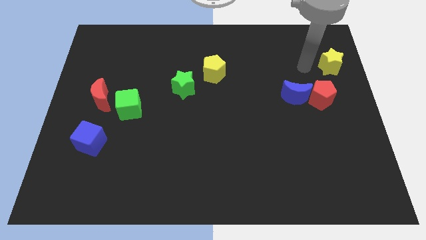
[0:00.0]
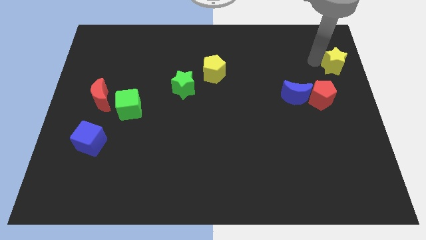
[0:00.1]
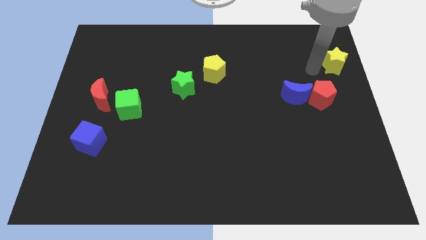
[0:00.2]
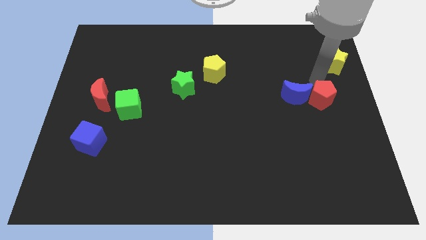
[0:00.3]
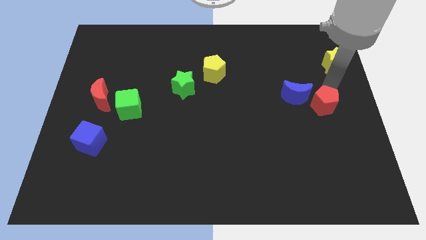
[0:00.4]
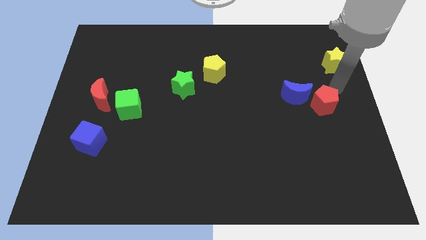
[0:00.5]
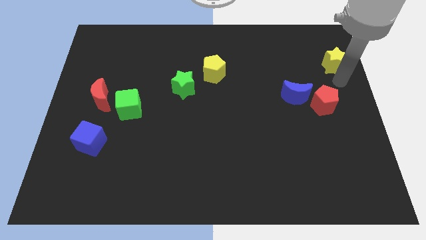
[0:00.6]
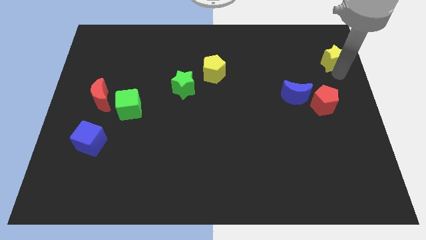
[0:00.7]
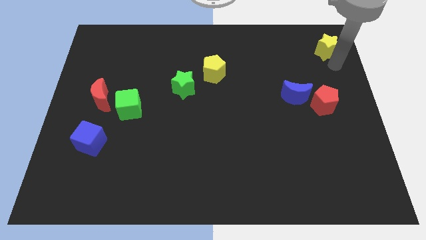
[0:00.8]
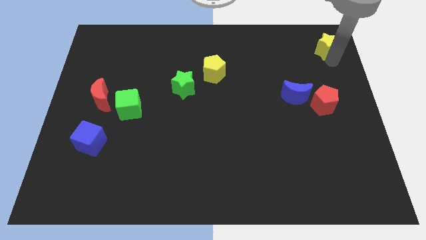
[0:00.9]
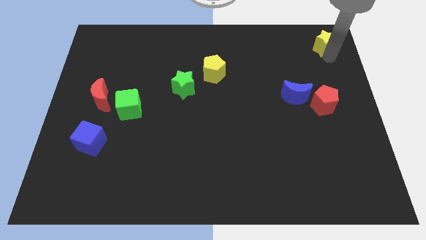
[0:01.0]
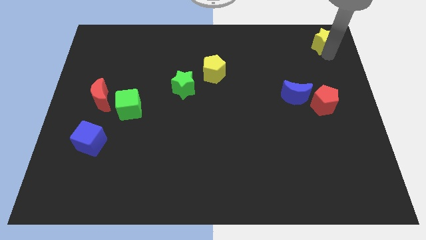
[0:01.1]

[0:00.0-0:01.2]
move the yellow star top right

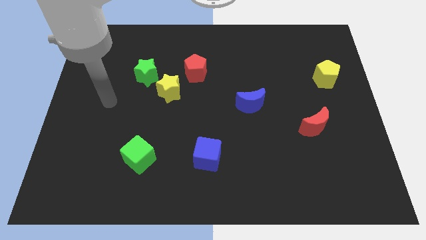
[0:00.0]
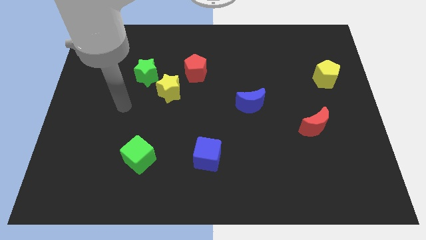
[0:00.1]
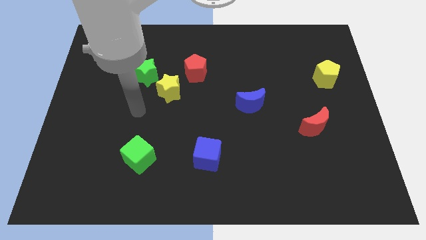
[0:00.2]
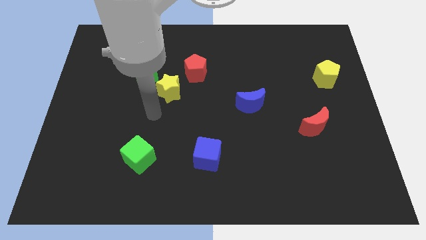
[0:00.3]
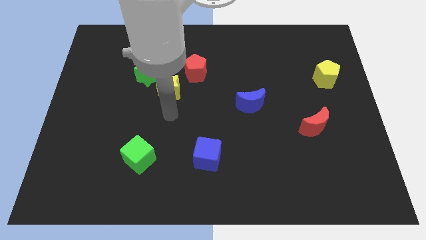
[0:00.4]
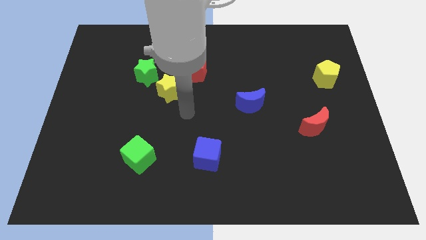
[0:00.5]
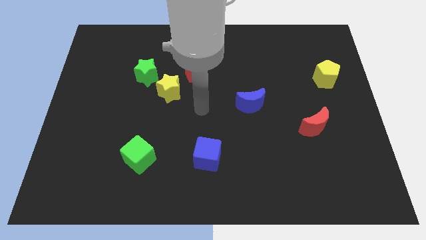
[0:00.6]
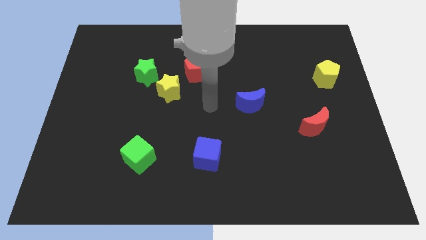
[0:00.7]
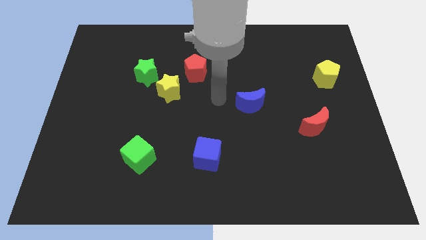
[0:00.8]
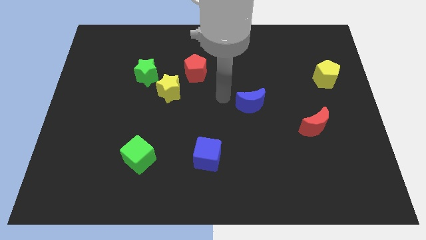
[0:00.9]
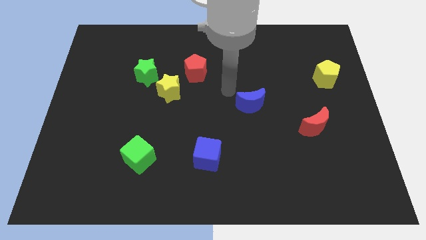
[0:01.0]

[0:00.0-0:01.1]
push the arm left to the blue moon

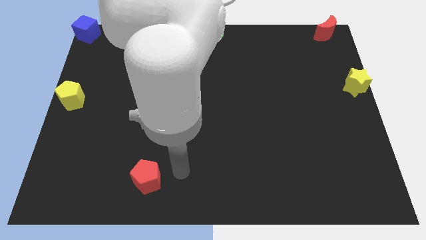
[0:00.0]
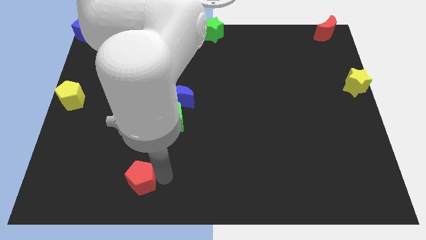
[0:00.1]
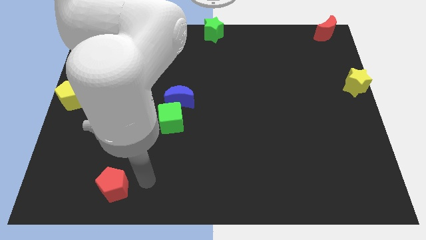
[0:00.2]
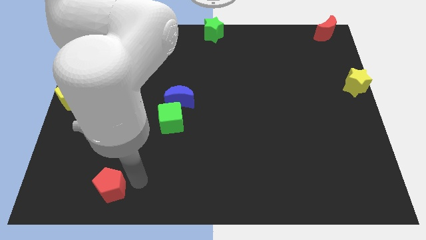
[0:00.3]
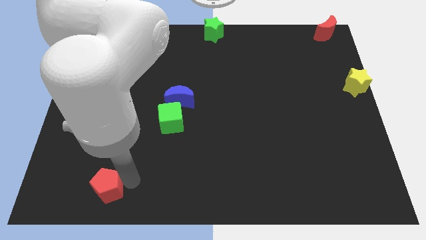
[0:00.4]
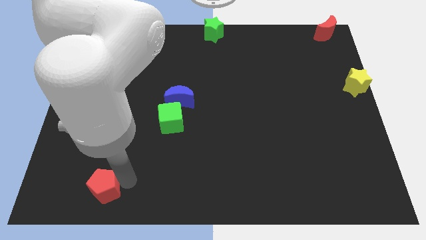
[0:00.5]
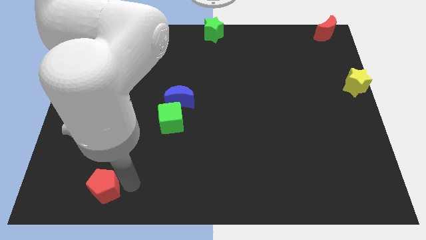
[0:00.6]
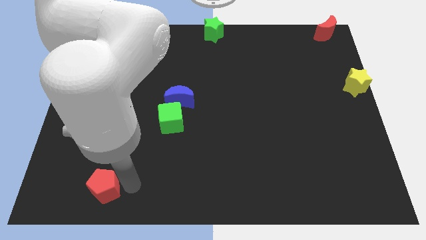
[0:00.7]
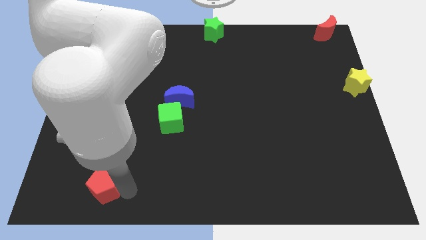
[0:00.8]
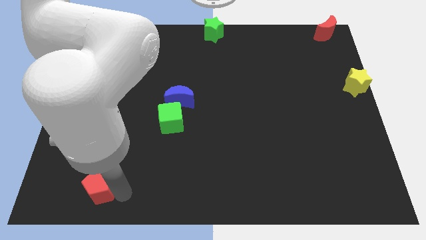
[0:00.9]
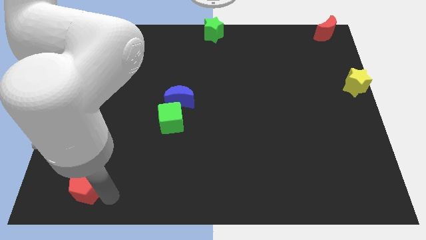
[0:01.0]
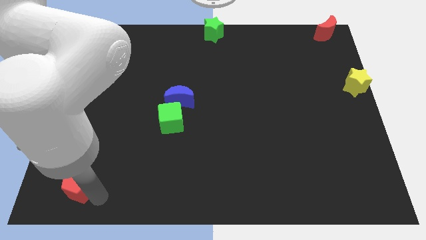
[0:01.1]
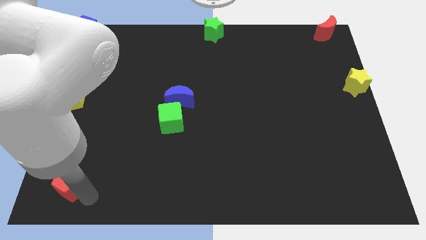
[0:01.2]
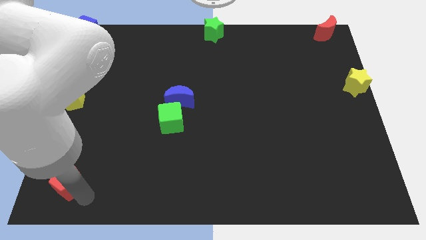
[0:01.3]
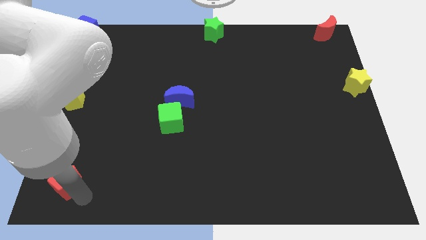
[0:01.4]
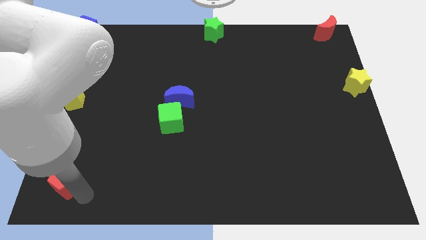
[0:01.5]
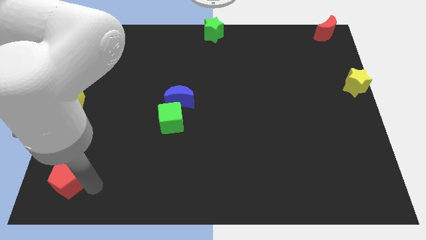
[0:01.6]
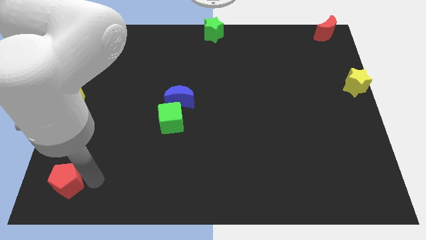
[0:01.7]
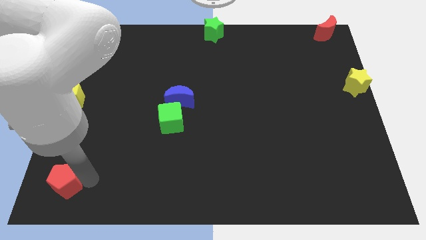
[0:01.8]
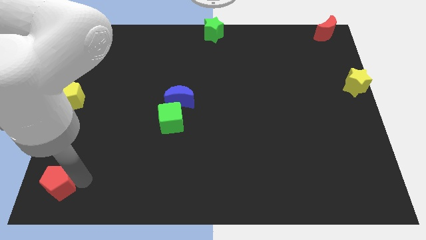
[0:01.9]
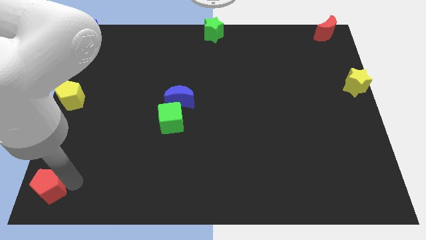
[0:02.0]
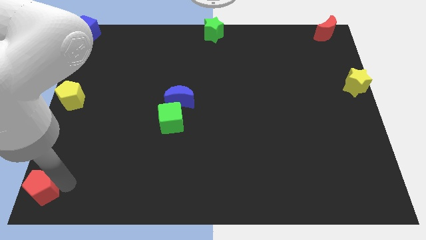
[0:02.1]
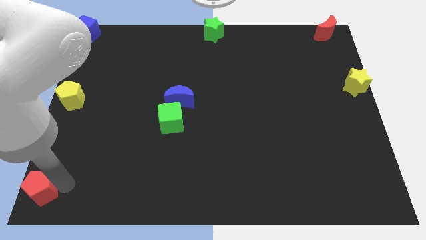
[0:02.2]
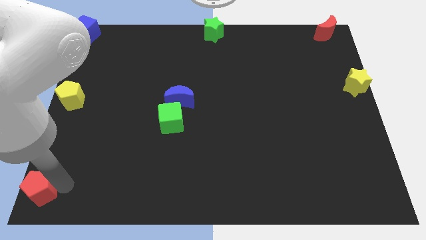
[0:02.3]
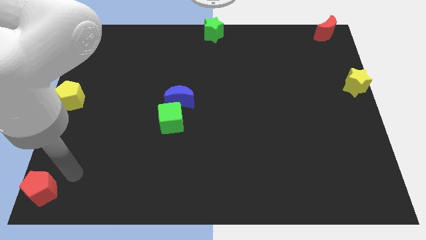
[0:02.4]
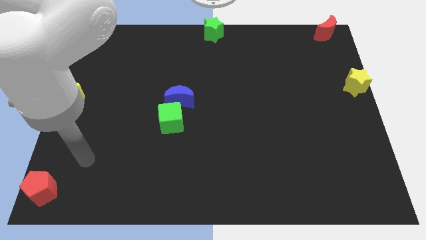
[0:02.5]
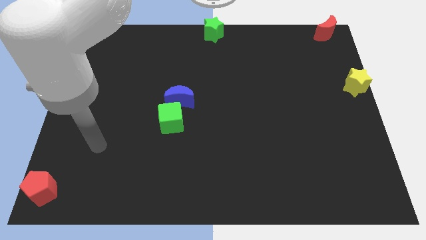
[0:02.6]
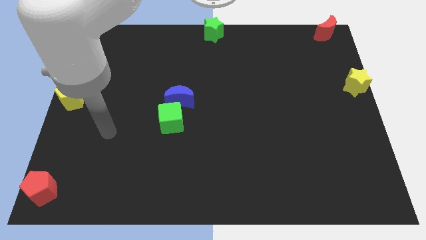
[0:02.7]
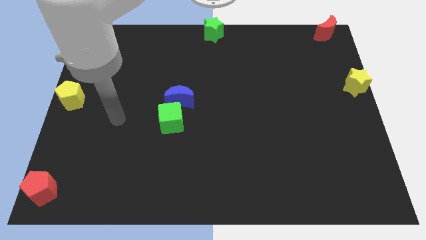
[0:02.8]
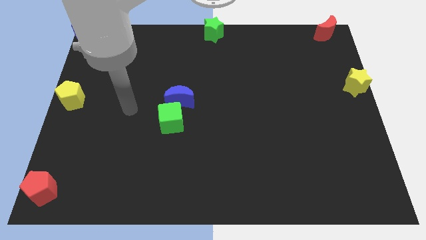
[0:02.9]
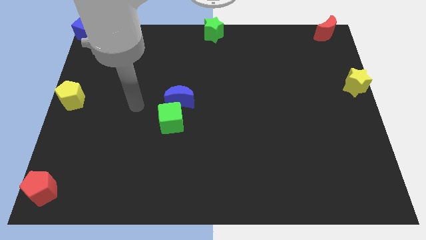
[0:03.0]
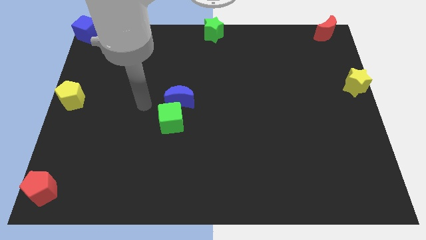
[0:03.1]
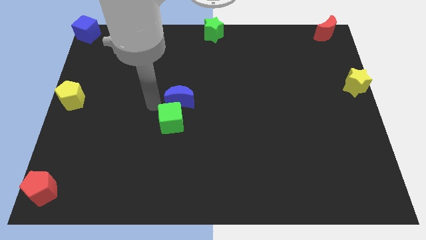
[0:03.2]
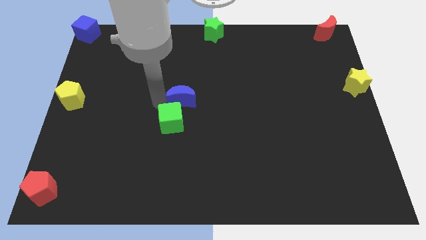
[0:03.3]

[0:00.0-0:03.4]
put the red pentagon to the bottom left corner of the board

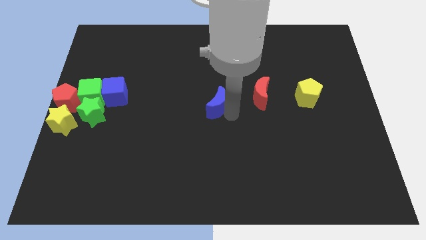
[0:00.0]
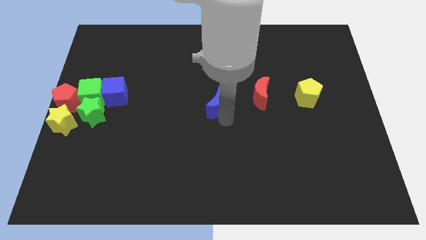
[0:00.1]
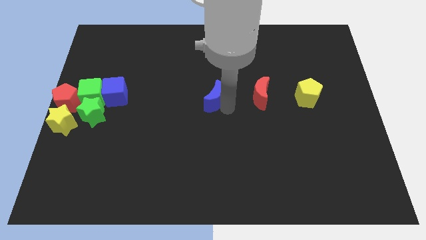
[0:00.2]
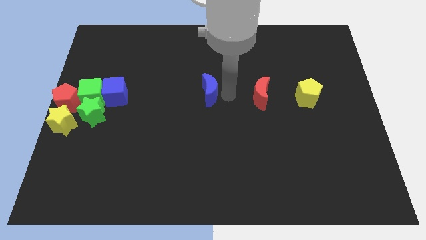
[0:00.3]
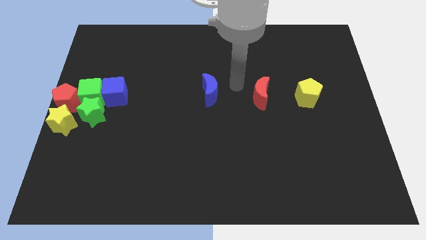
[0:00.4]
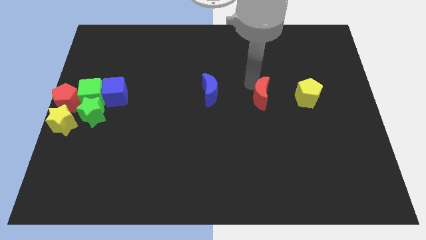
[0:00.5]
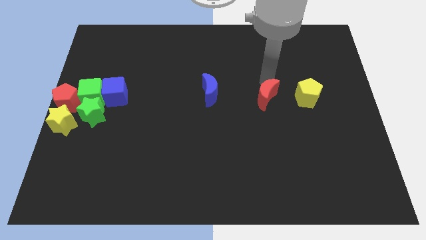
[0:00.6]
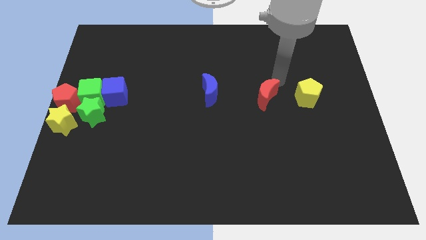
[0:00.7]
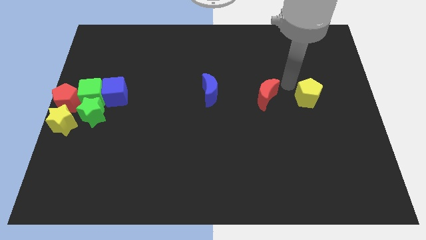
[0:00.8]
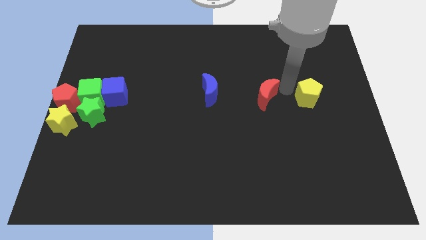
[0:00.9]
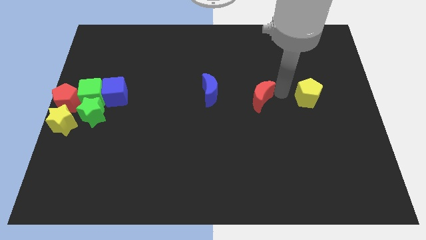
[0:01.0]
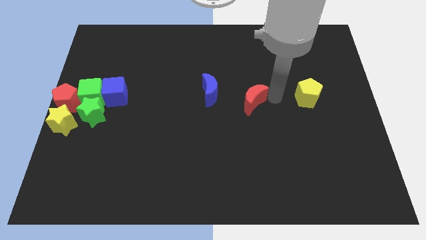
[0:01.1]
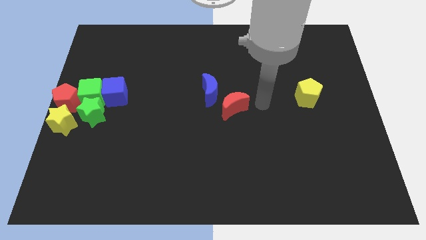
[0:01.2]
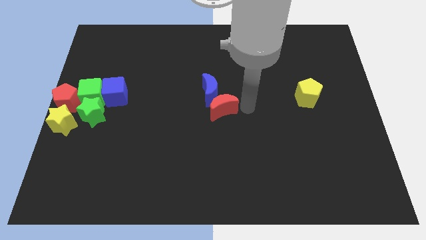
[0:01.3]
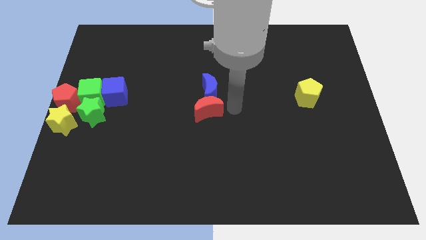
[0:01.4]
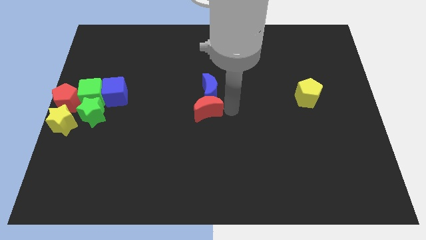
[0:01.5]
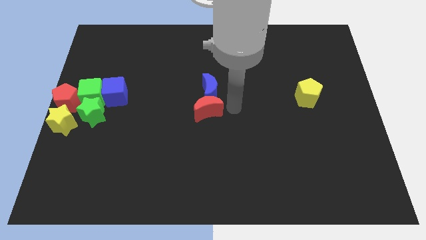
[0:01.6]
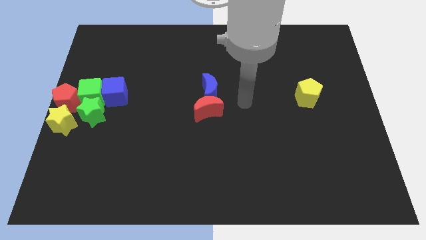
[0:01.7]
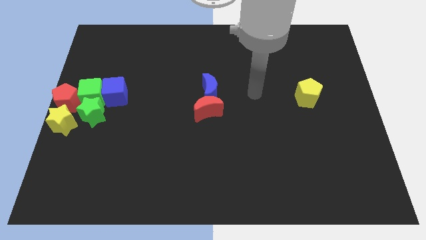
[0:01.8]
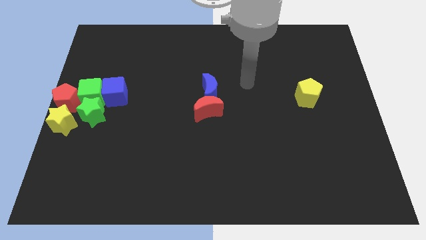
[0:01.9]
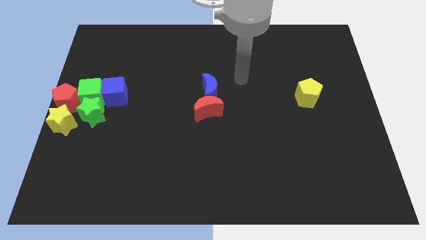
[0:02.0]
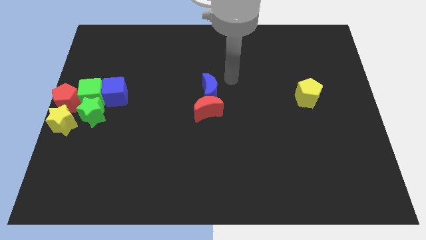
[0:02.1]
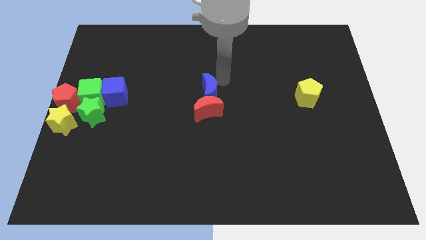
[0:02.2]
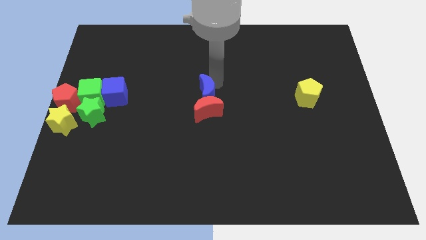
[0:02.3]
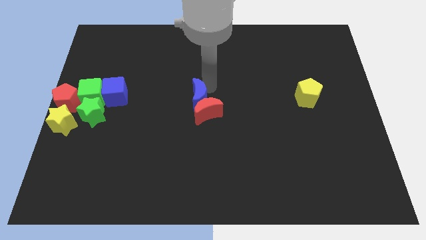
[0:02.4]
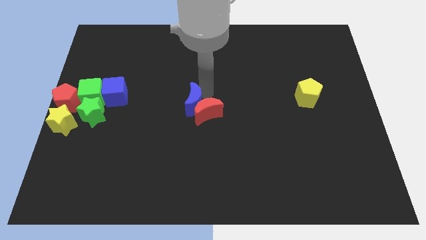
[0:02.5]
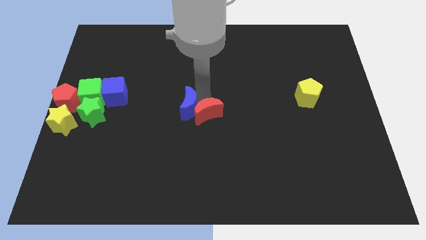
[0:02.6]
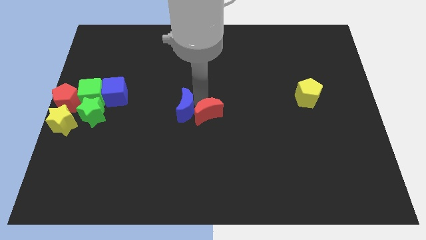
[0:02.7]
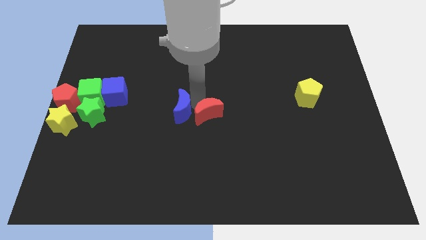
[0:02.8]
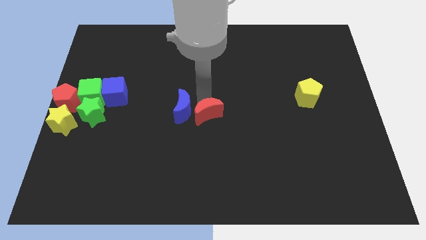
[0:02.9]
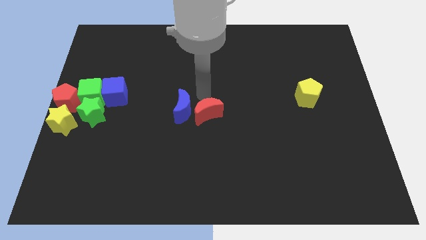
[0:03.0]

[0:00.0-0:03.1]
place red moon blue crescent to the center
